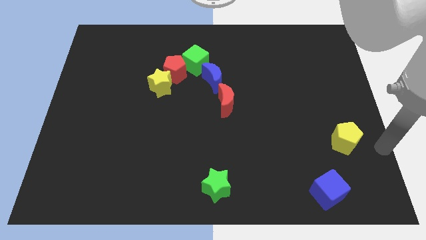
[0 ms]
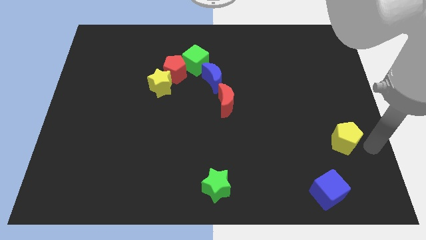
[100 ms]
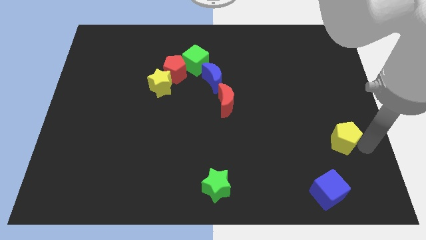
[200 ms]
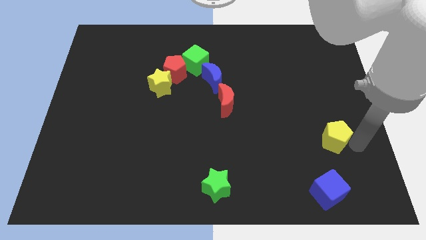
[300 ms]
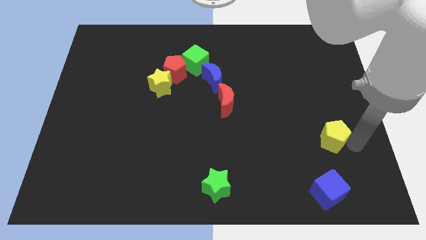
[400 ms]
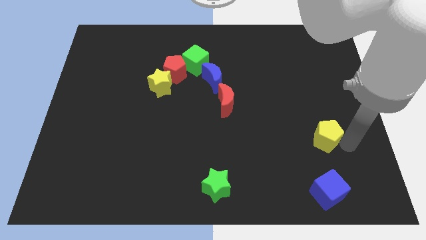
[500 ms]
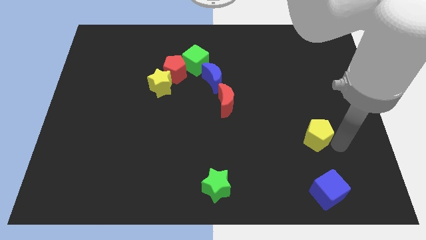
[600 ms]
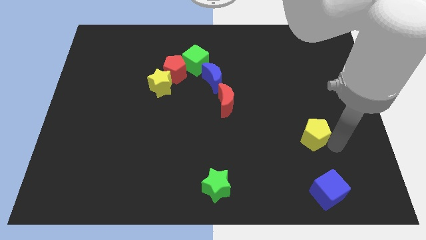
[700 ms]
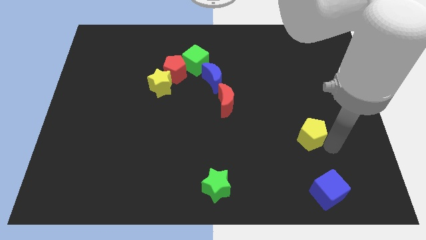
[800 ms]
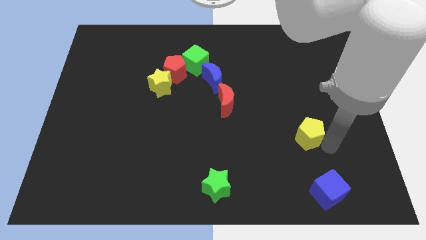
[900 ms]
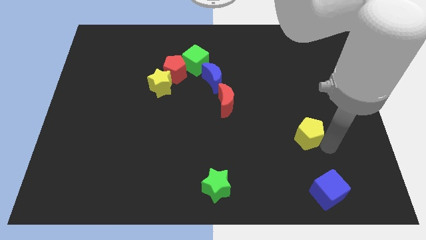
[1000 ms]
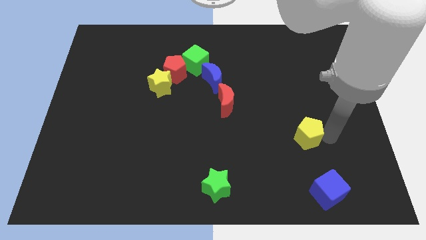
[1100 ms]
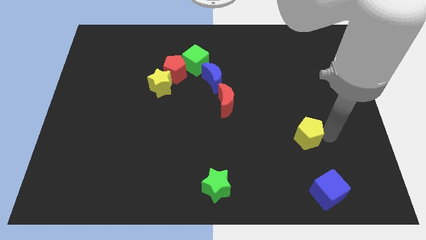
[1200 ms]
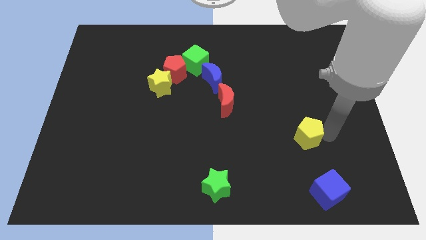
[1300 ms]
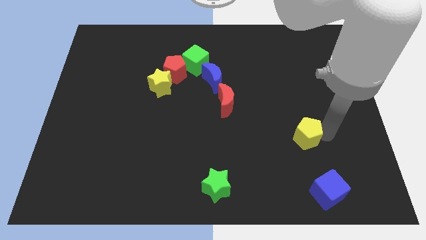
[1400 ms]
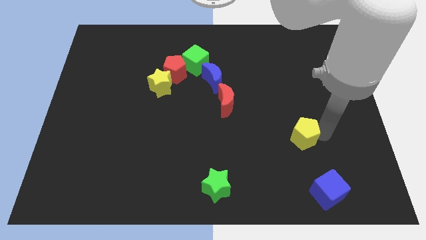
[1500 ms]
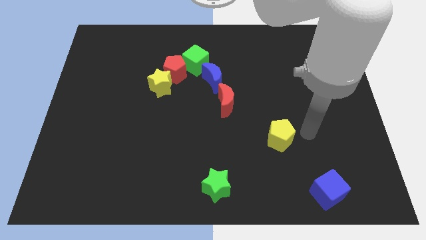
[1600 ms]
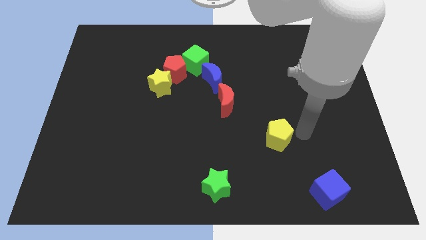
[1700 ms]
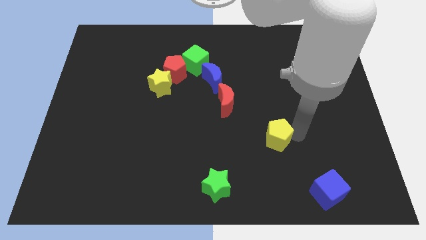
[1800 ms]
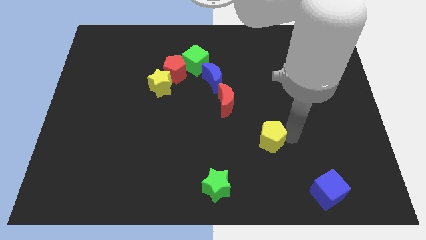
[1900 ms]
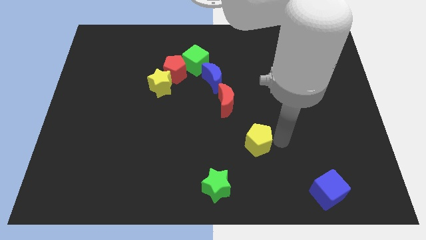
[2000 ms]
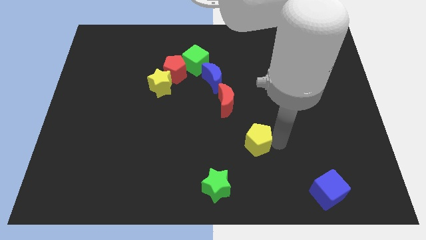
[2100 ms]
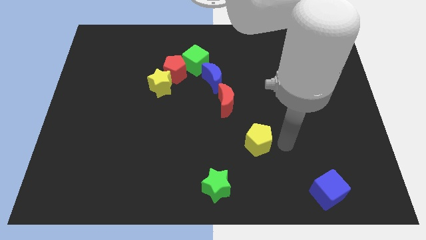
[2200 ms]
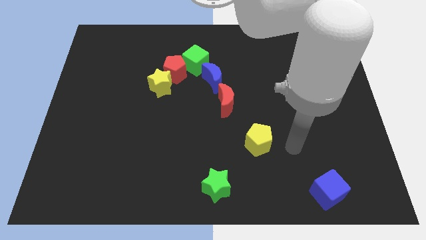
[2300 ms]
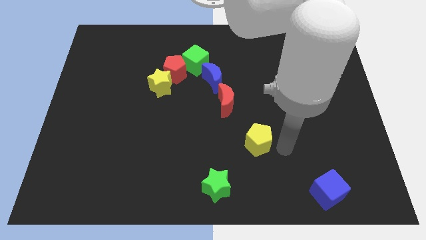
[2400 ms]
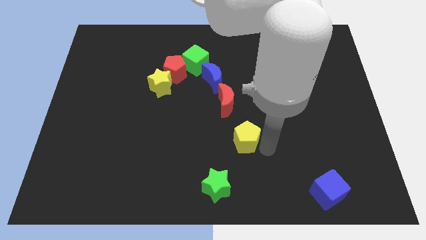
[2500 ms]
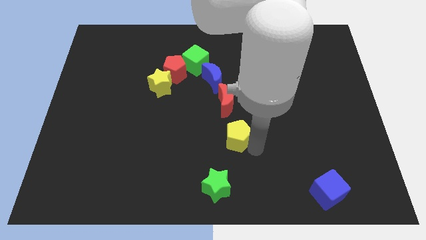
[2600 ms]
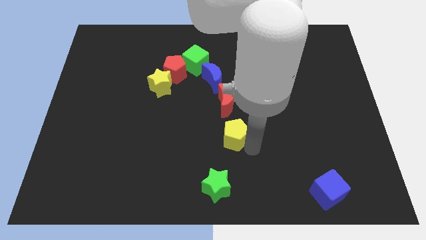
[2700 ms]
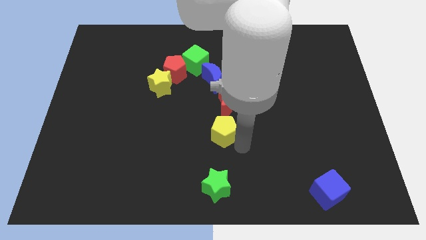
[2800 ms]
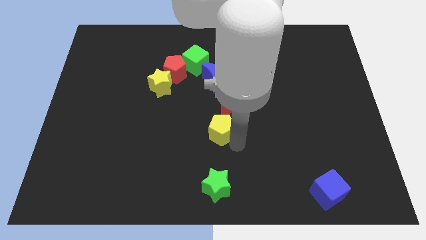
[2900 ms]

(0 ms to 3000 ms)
place yellow pentagon below red crescent

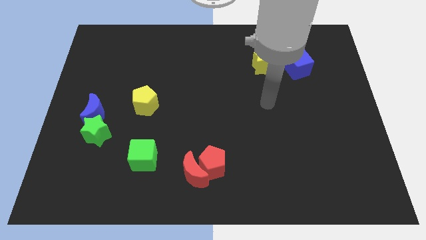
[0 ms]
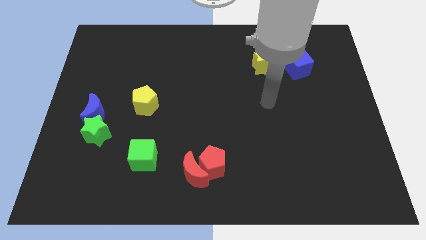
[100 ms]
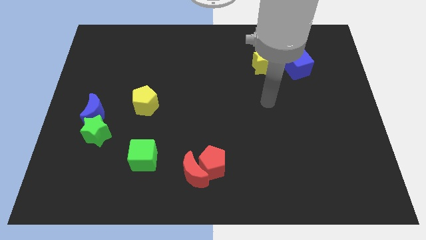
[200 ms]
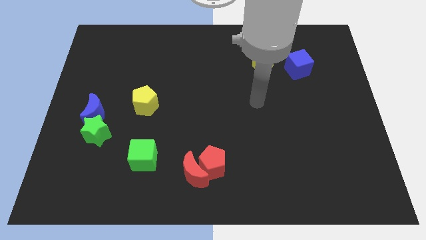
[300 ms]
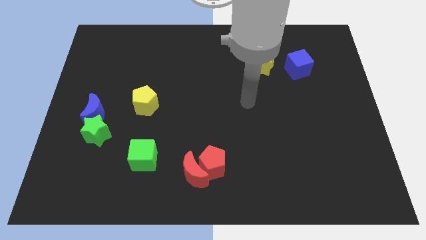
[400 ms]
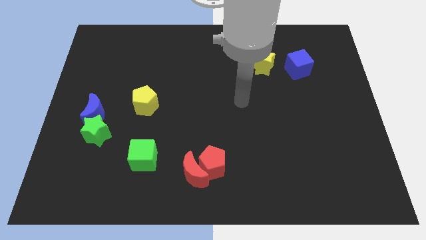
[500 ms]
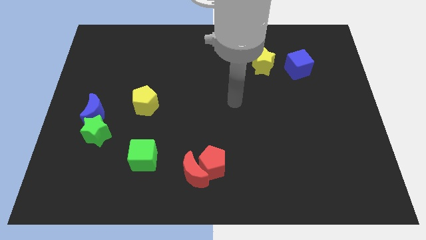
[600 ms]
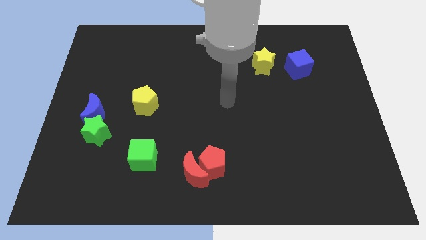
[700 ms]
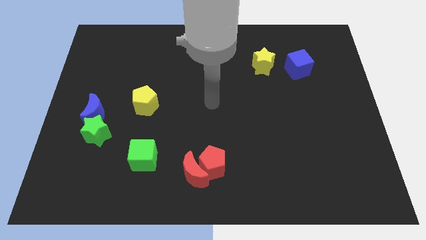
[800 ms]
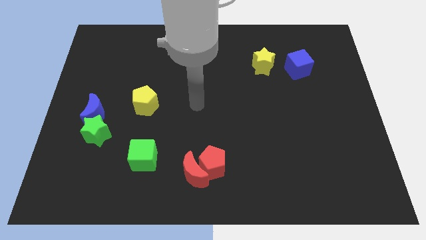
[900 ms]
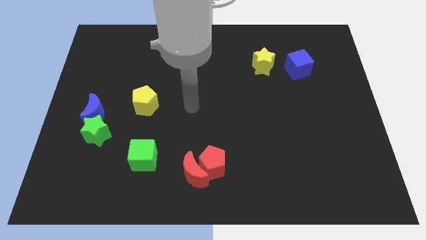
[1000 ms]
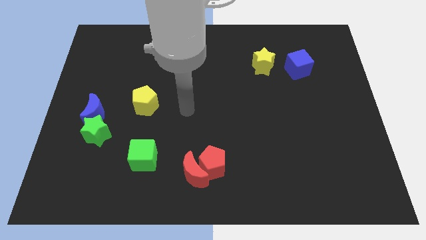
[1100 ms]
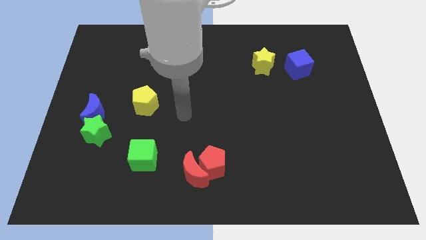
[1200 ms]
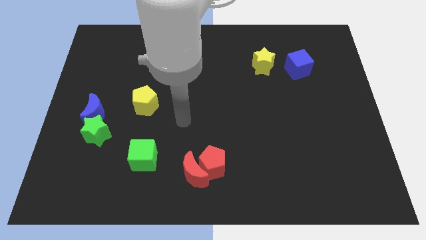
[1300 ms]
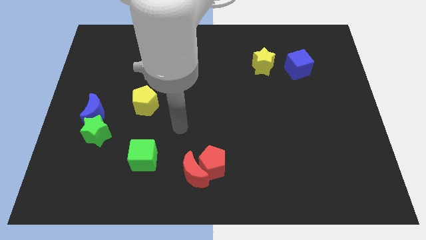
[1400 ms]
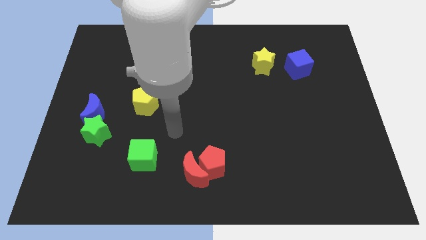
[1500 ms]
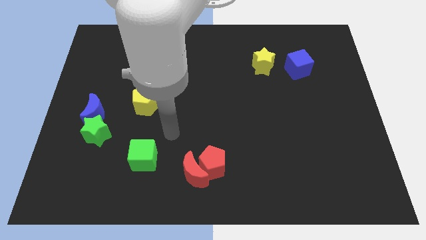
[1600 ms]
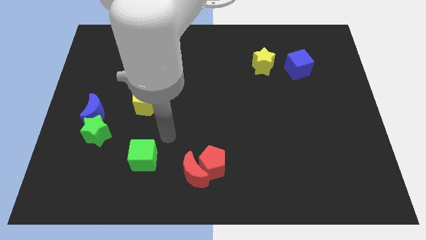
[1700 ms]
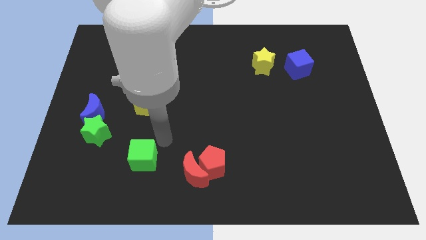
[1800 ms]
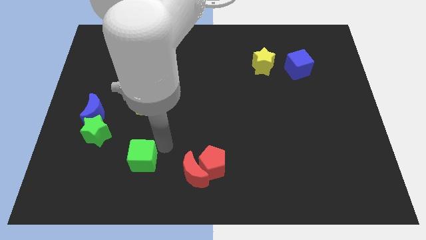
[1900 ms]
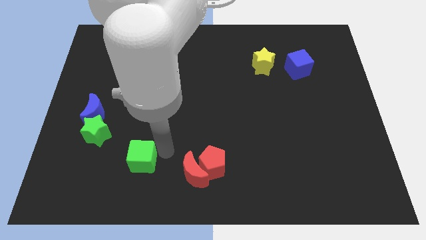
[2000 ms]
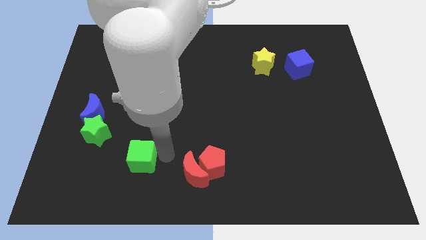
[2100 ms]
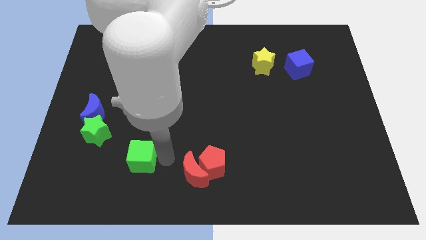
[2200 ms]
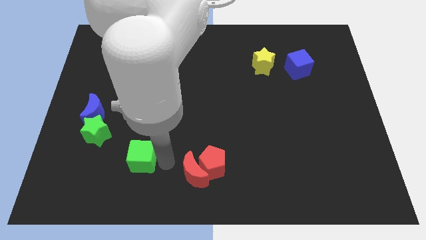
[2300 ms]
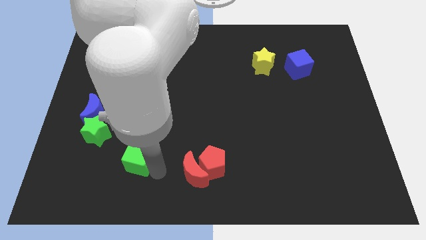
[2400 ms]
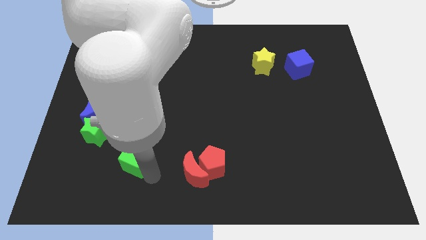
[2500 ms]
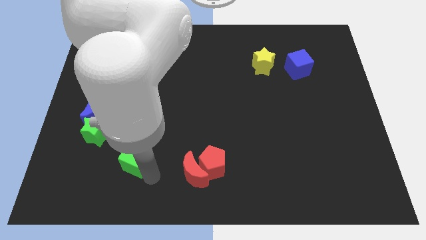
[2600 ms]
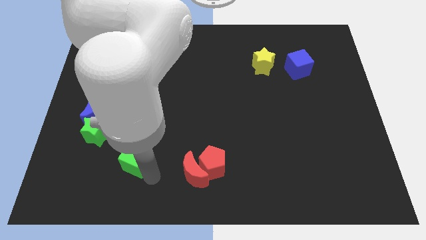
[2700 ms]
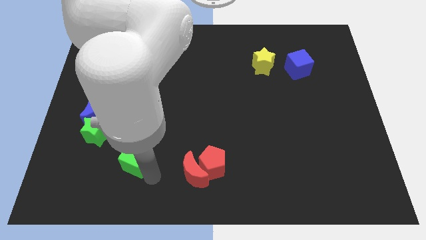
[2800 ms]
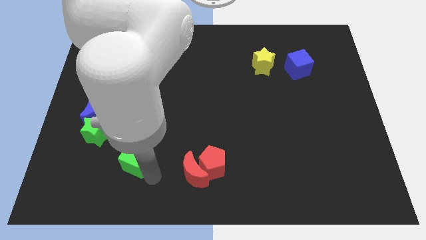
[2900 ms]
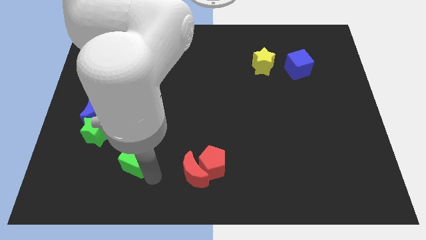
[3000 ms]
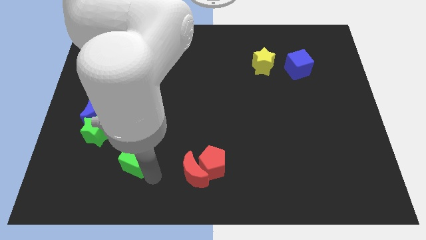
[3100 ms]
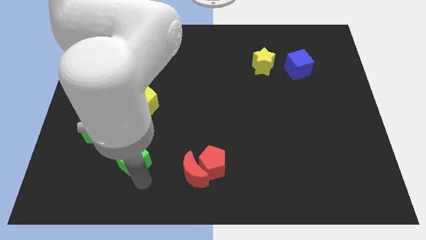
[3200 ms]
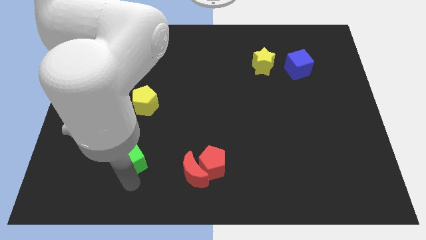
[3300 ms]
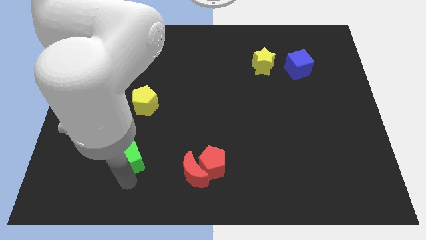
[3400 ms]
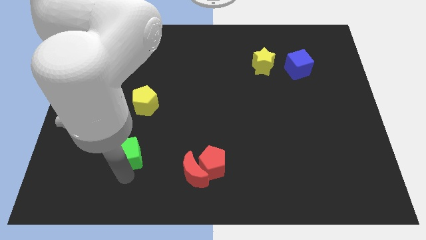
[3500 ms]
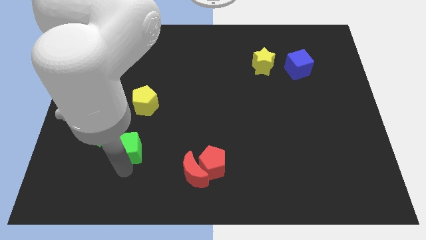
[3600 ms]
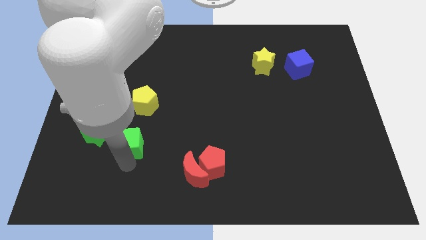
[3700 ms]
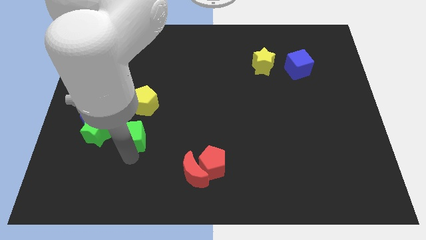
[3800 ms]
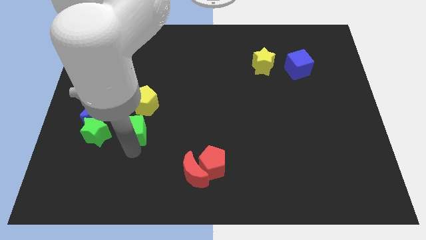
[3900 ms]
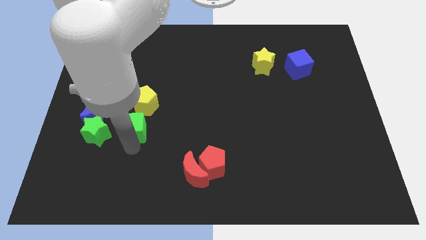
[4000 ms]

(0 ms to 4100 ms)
place the green cube right to the green star

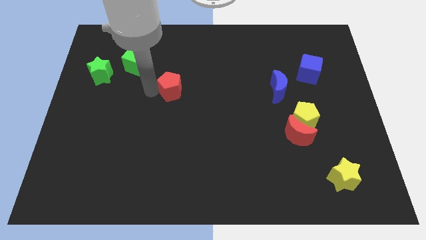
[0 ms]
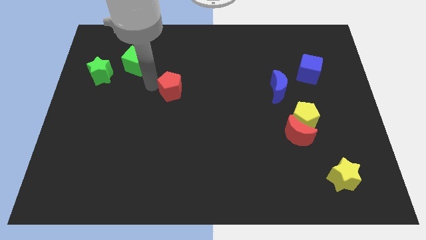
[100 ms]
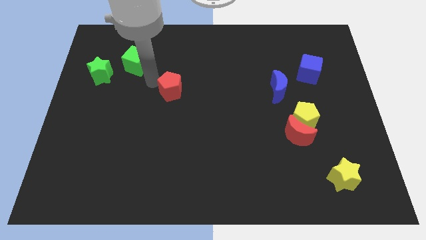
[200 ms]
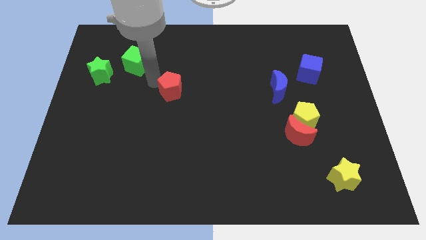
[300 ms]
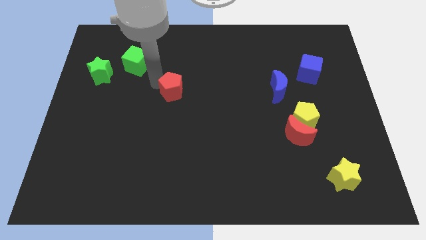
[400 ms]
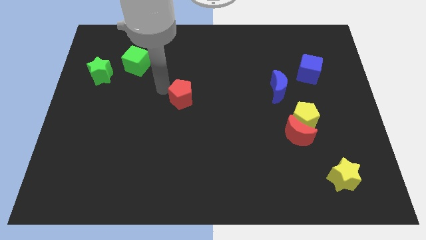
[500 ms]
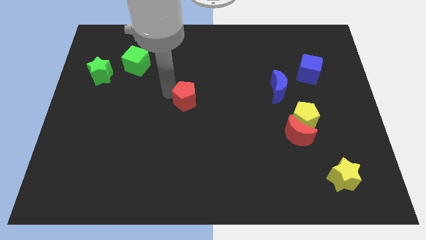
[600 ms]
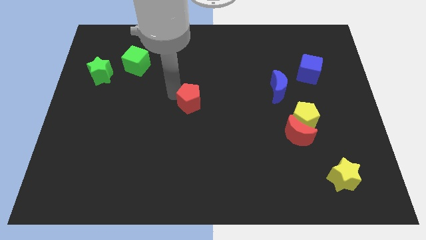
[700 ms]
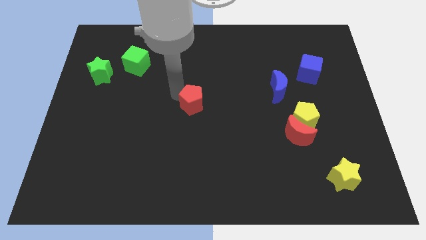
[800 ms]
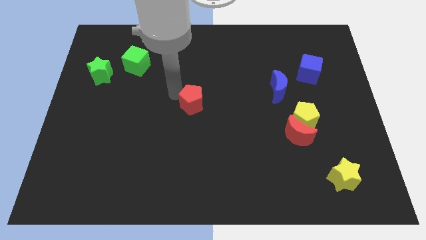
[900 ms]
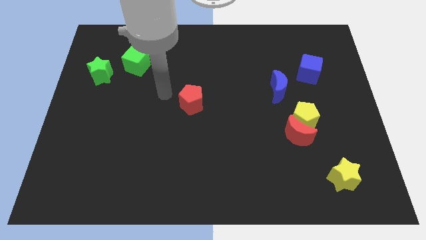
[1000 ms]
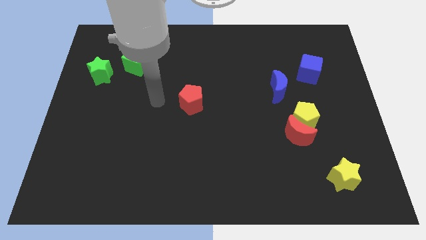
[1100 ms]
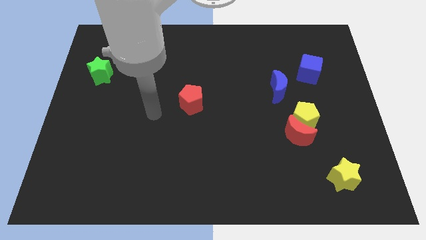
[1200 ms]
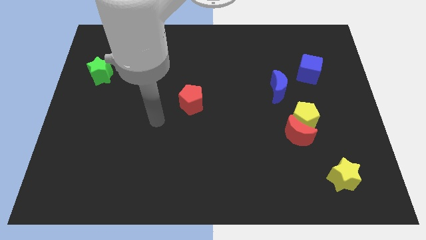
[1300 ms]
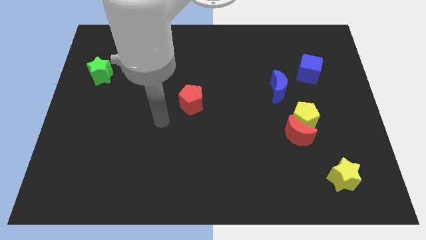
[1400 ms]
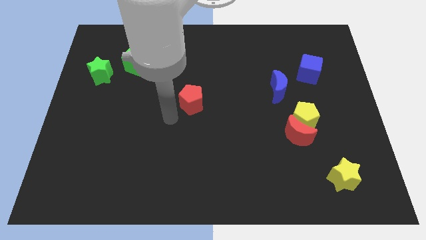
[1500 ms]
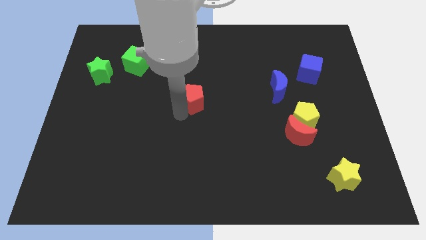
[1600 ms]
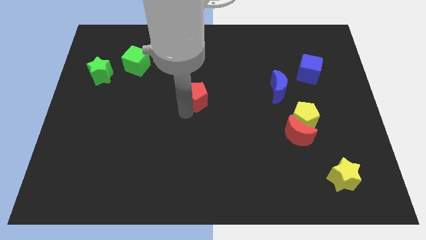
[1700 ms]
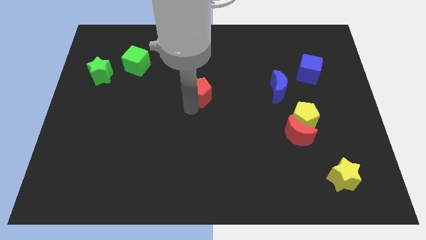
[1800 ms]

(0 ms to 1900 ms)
place the red pentagon at the center of the board
